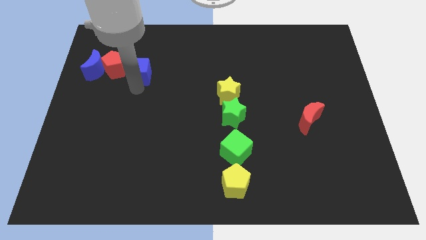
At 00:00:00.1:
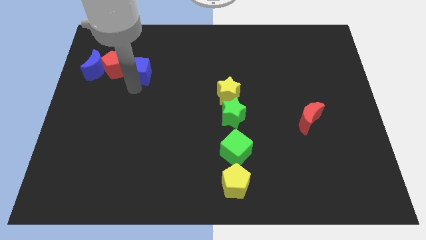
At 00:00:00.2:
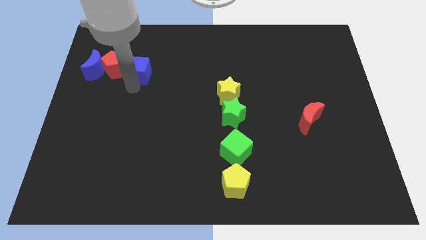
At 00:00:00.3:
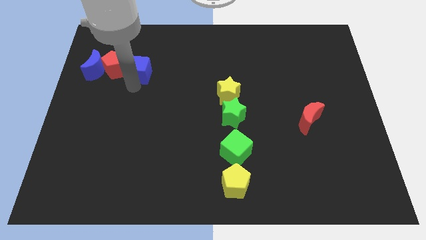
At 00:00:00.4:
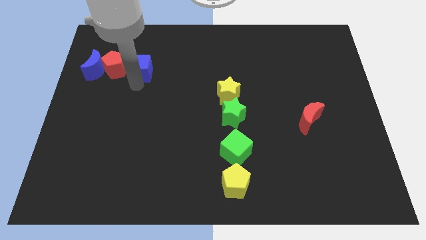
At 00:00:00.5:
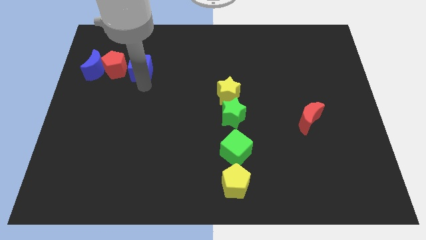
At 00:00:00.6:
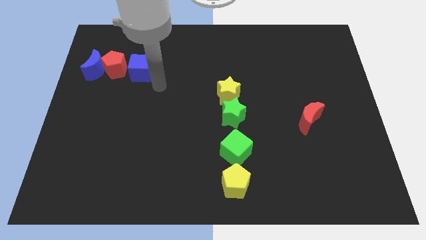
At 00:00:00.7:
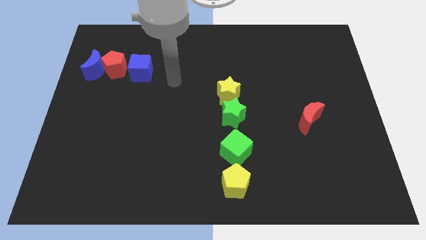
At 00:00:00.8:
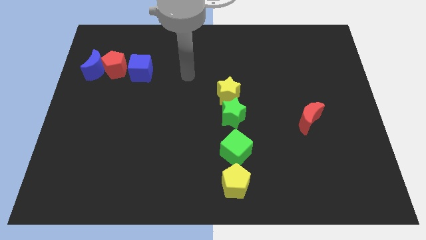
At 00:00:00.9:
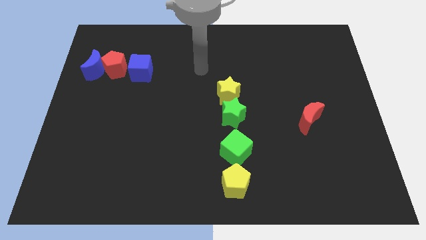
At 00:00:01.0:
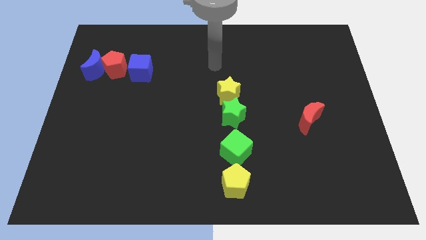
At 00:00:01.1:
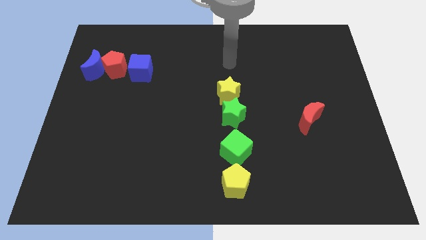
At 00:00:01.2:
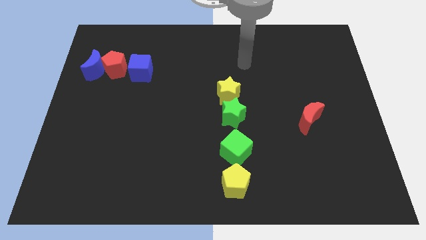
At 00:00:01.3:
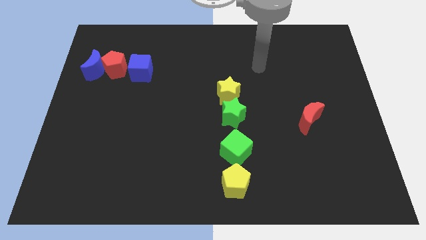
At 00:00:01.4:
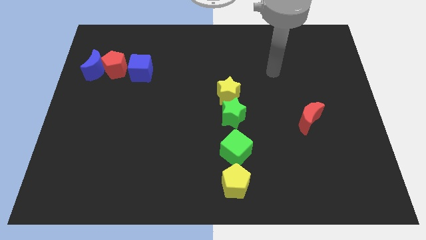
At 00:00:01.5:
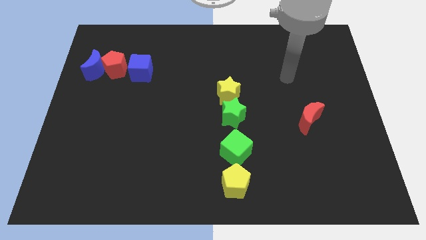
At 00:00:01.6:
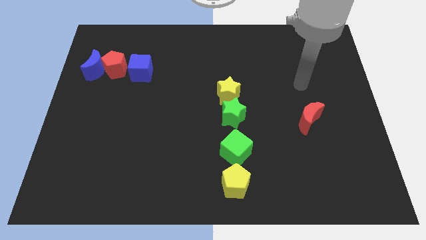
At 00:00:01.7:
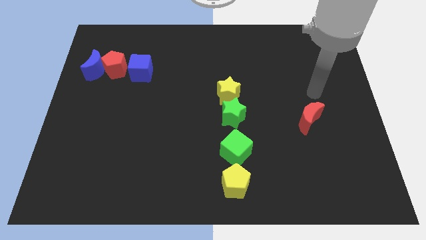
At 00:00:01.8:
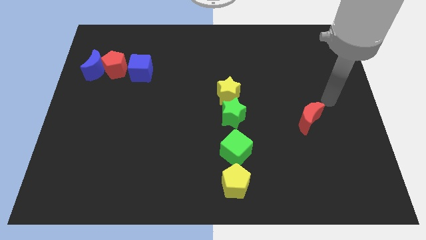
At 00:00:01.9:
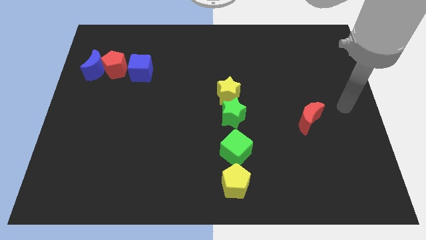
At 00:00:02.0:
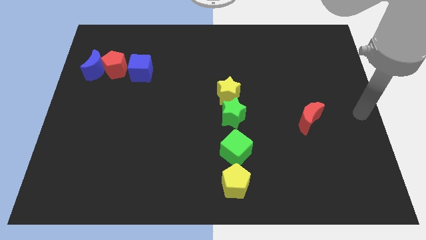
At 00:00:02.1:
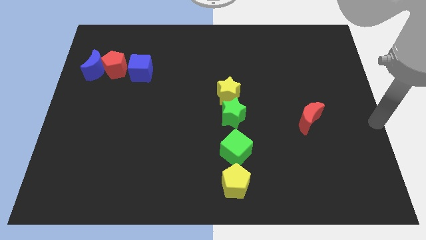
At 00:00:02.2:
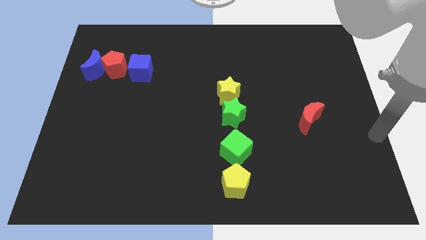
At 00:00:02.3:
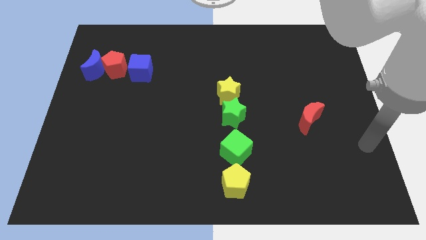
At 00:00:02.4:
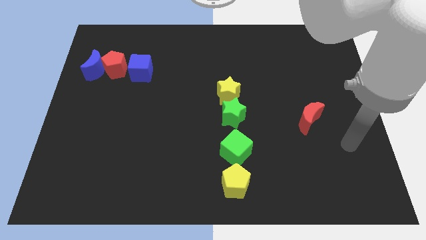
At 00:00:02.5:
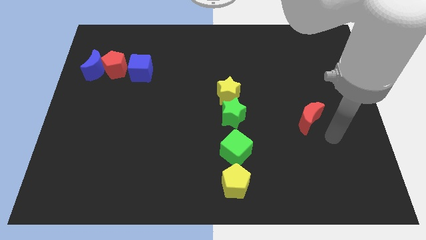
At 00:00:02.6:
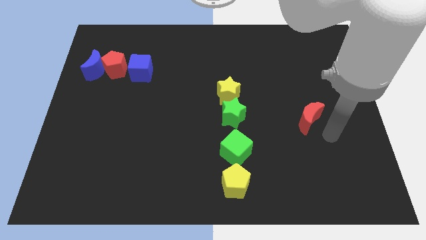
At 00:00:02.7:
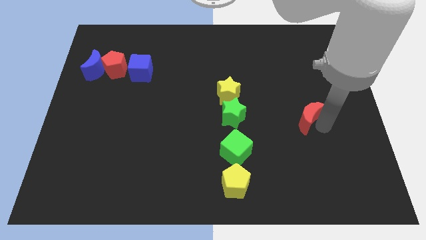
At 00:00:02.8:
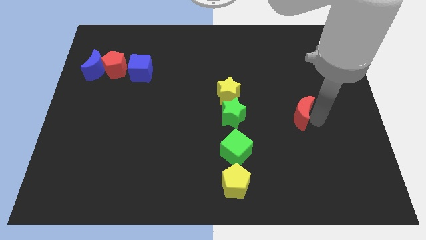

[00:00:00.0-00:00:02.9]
touch the bottom right of the red moon

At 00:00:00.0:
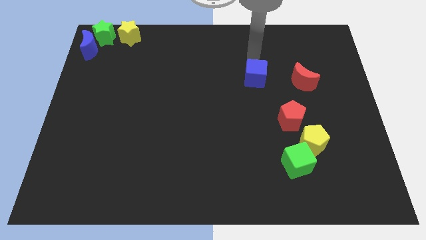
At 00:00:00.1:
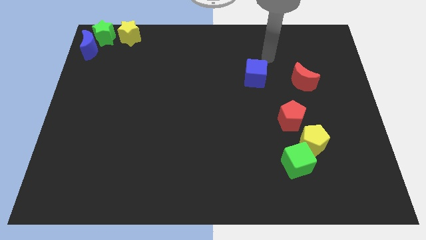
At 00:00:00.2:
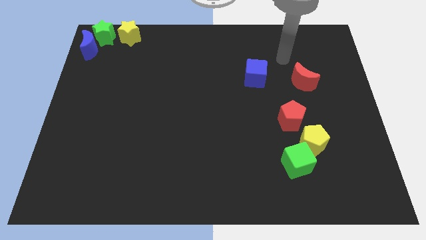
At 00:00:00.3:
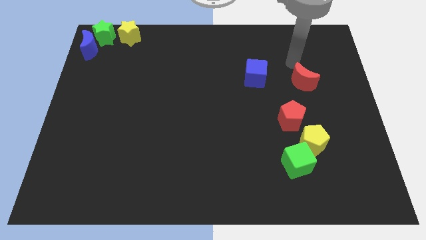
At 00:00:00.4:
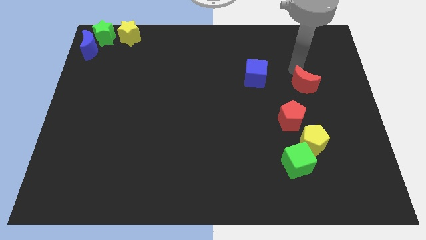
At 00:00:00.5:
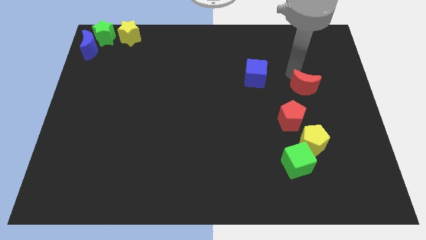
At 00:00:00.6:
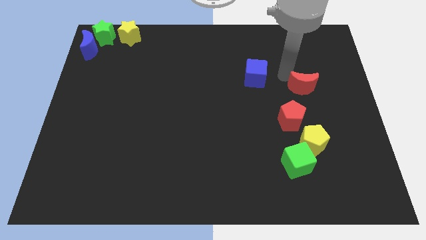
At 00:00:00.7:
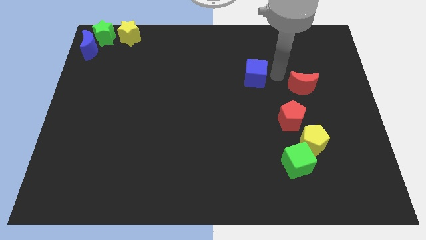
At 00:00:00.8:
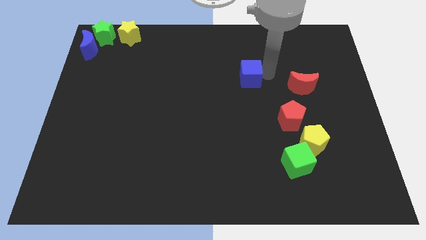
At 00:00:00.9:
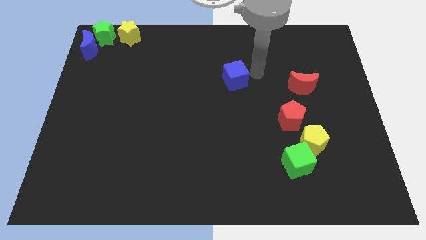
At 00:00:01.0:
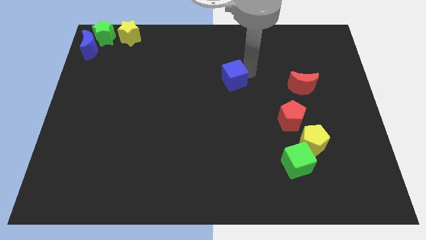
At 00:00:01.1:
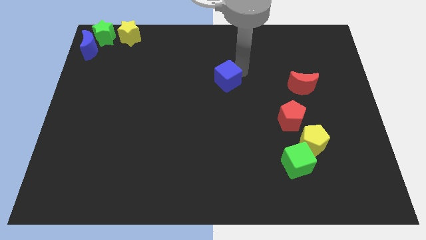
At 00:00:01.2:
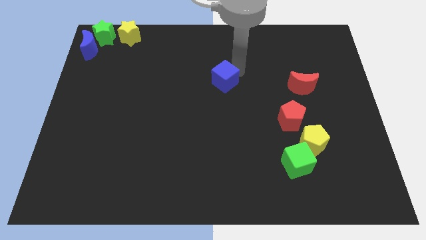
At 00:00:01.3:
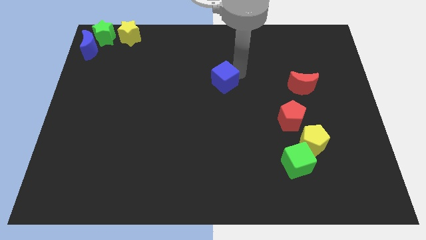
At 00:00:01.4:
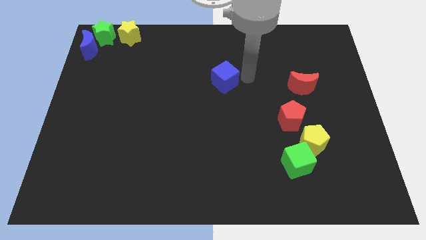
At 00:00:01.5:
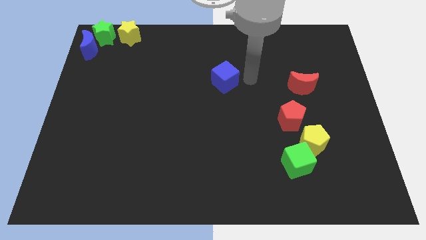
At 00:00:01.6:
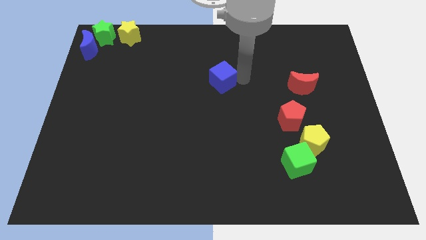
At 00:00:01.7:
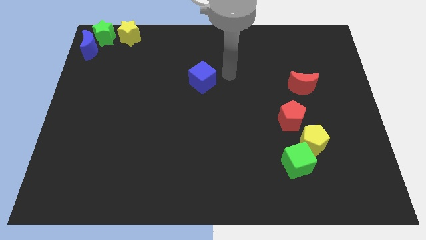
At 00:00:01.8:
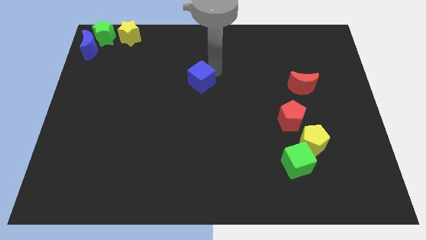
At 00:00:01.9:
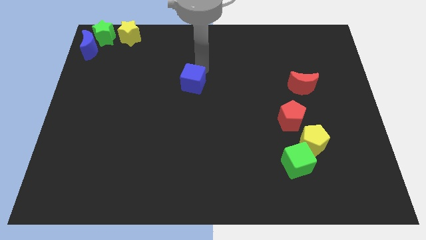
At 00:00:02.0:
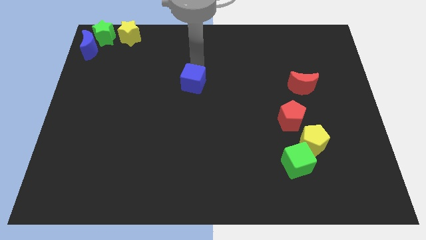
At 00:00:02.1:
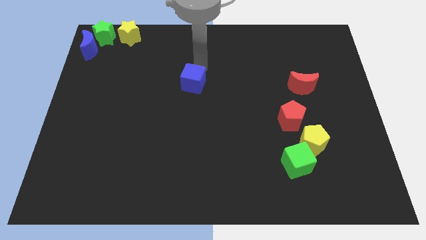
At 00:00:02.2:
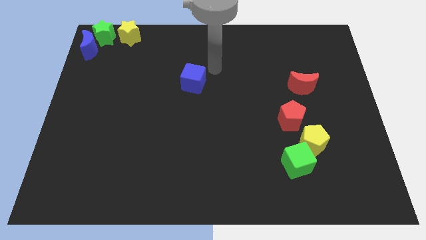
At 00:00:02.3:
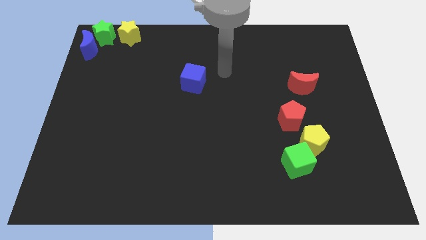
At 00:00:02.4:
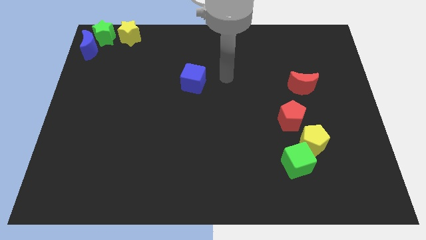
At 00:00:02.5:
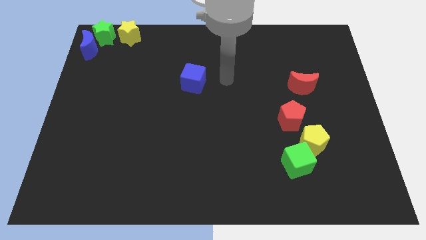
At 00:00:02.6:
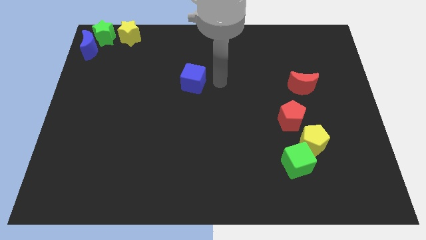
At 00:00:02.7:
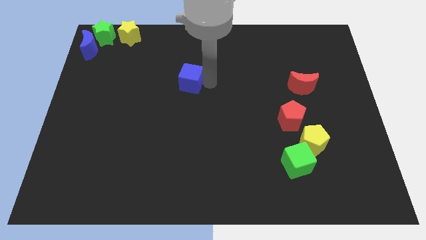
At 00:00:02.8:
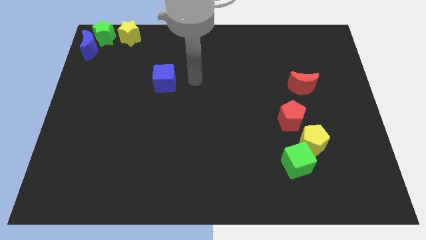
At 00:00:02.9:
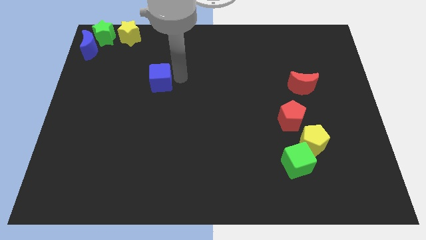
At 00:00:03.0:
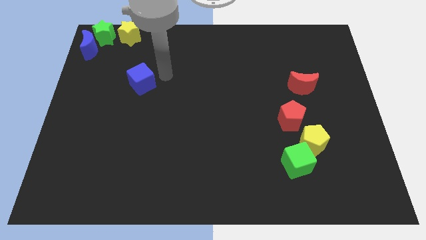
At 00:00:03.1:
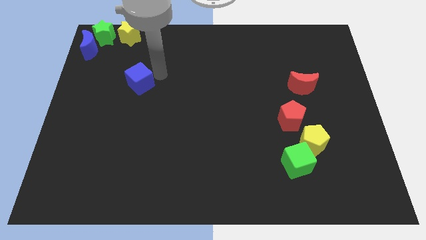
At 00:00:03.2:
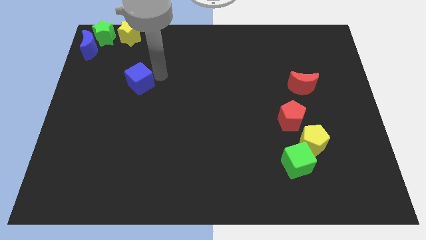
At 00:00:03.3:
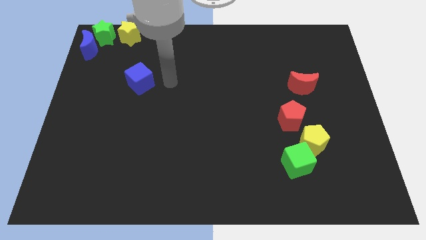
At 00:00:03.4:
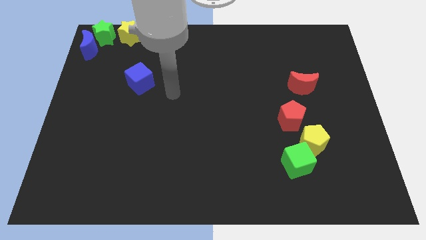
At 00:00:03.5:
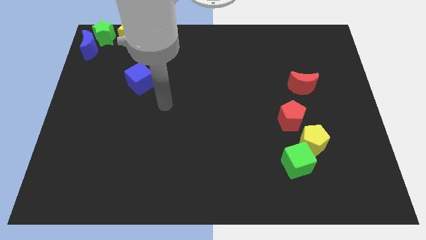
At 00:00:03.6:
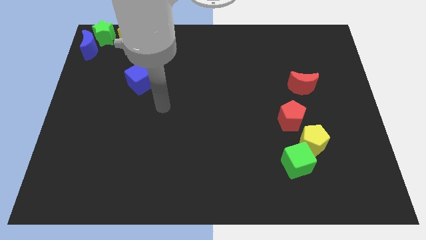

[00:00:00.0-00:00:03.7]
move blue block apart from red crescent

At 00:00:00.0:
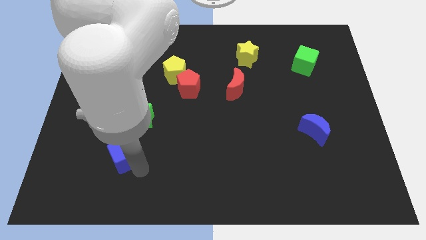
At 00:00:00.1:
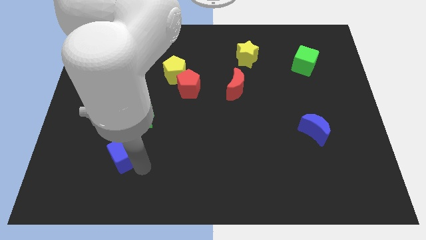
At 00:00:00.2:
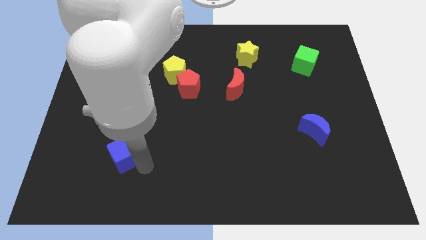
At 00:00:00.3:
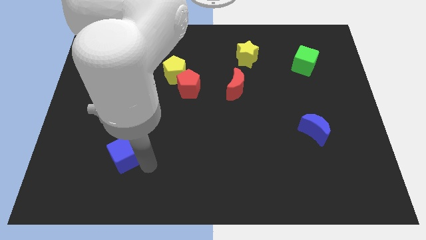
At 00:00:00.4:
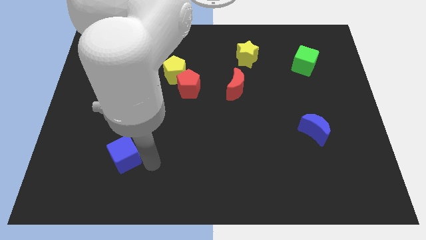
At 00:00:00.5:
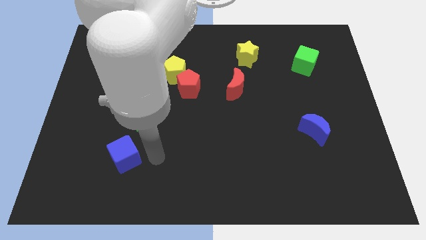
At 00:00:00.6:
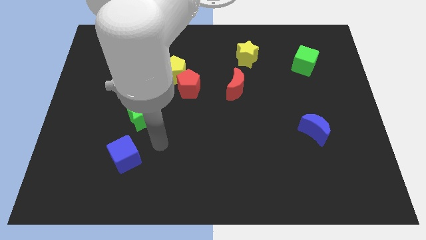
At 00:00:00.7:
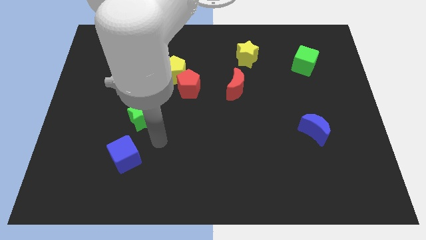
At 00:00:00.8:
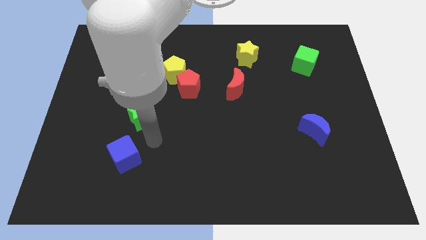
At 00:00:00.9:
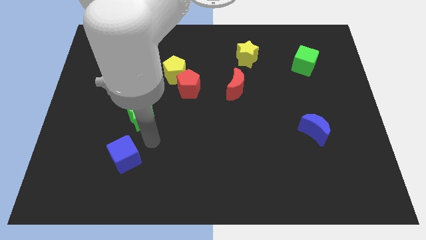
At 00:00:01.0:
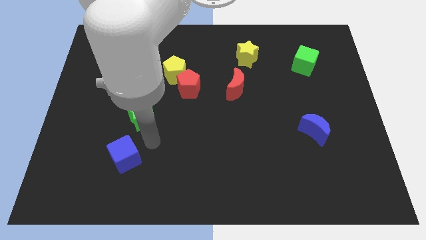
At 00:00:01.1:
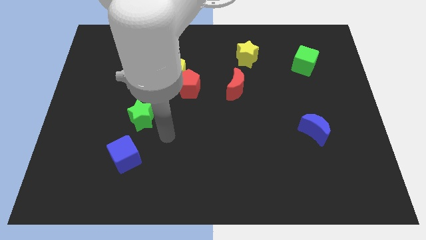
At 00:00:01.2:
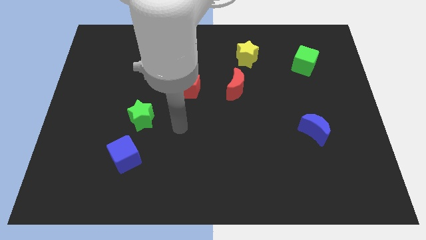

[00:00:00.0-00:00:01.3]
move the arm away from the blue cube

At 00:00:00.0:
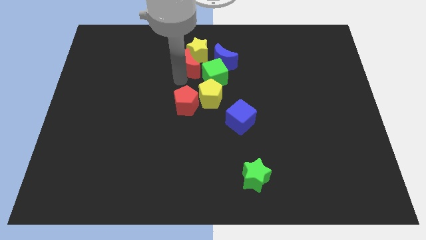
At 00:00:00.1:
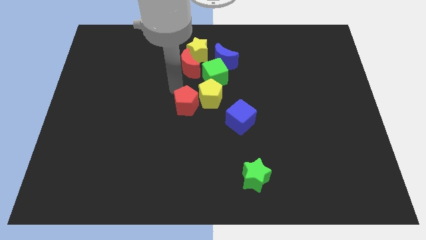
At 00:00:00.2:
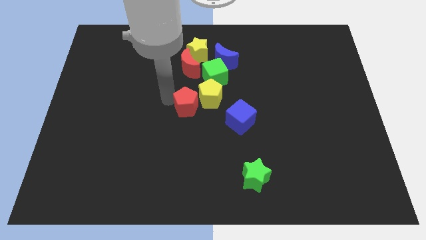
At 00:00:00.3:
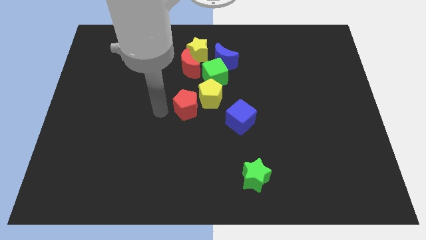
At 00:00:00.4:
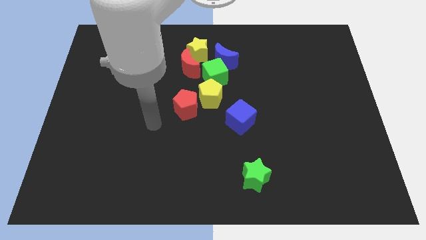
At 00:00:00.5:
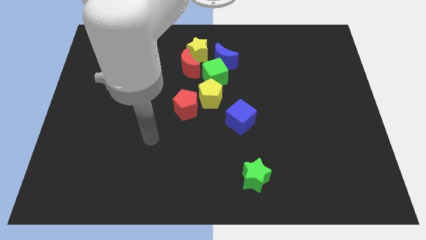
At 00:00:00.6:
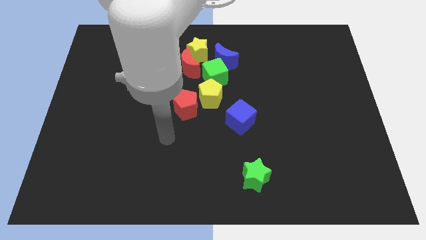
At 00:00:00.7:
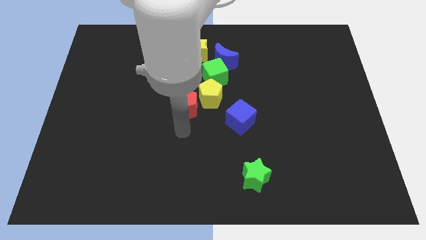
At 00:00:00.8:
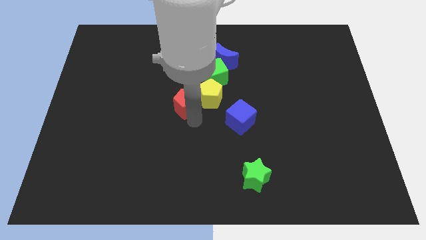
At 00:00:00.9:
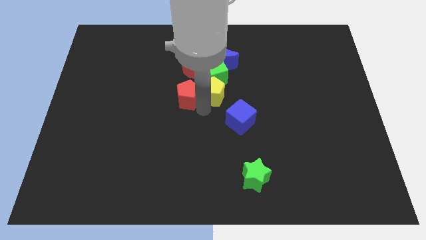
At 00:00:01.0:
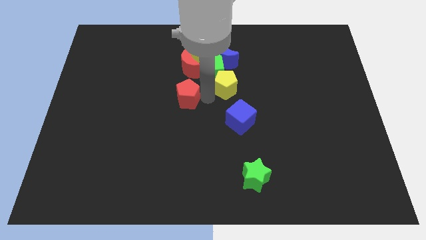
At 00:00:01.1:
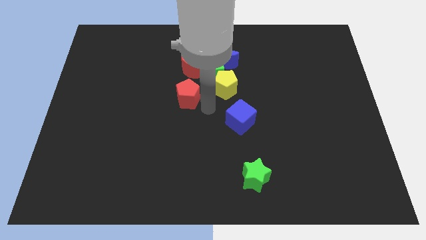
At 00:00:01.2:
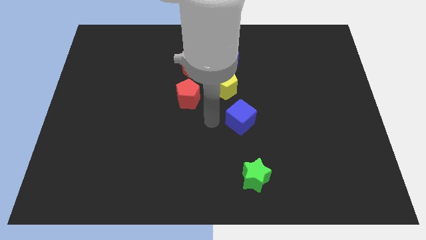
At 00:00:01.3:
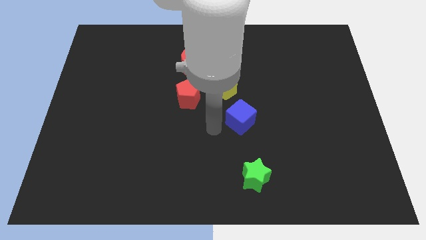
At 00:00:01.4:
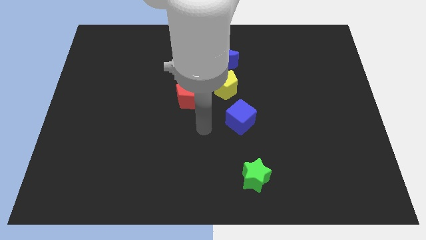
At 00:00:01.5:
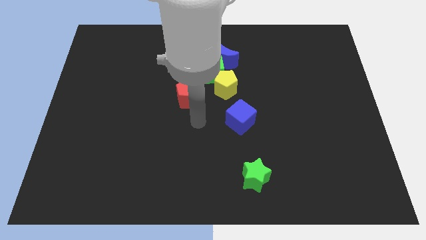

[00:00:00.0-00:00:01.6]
separate the red pentagon from the yellow pentagon
